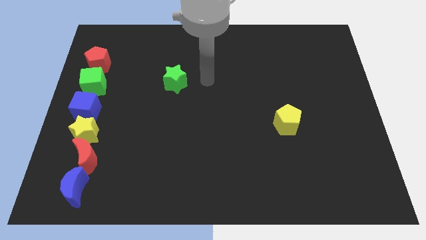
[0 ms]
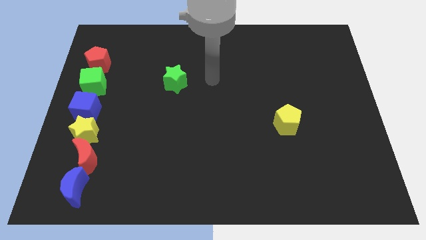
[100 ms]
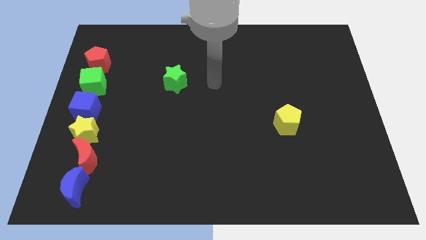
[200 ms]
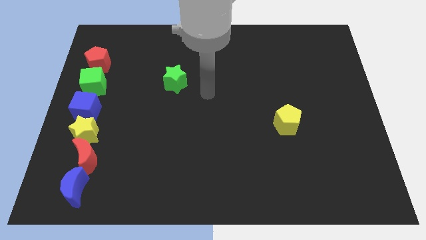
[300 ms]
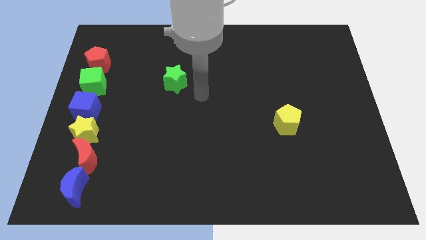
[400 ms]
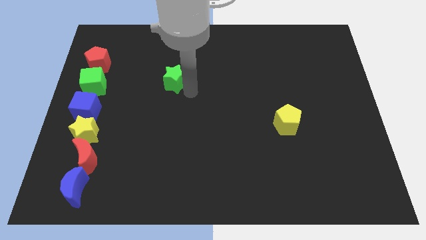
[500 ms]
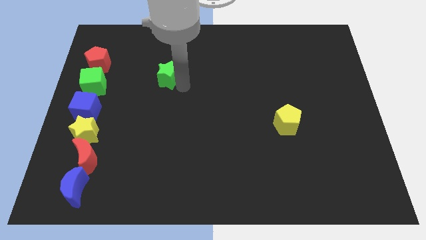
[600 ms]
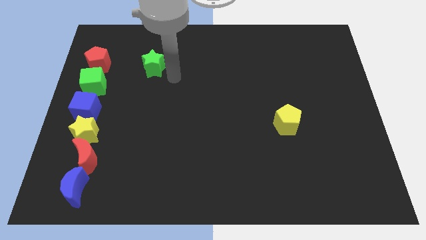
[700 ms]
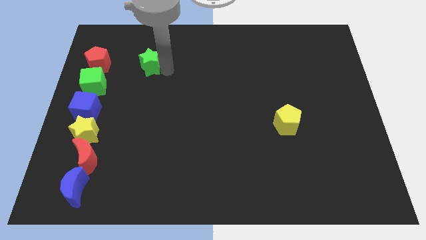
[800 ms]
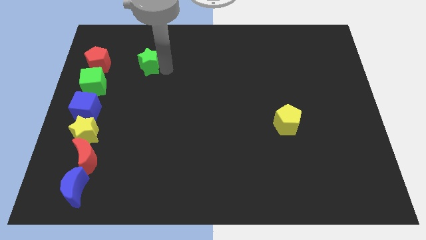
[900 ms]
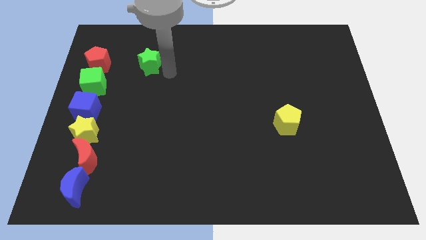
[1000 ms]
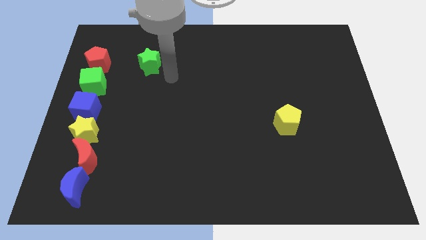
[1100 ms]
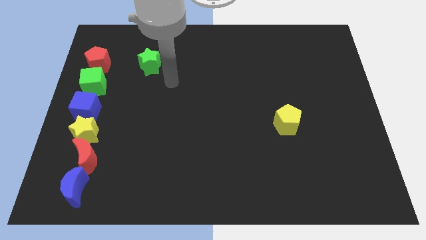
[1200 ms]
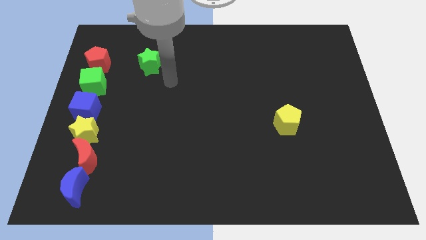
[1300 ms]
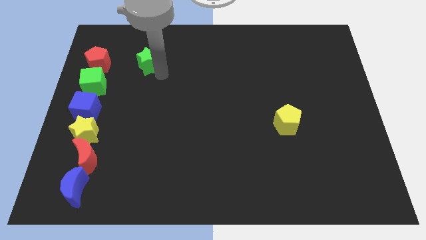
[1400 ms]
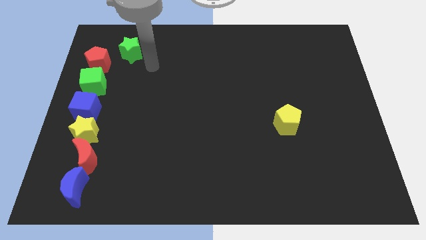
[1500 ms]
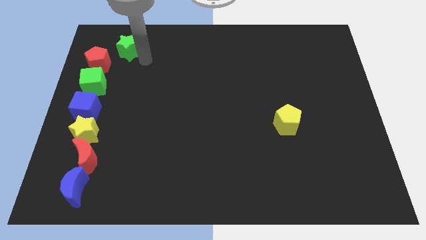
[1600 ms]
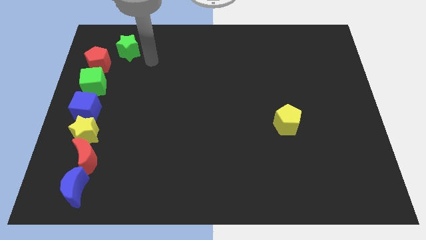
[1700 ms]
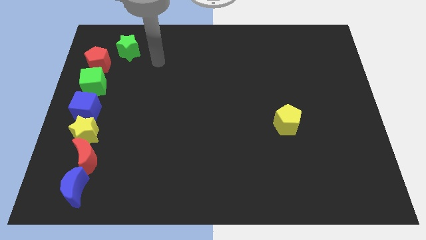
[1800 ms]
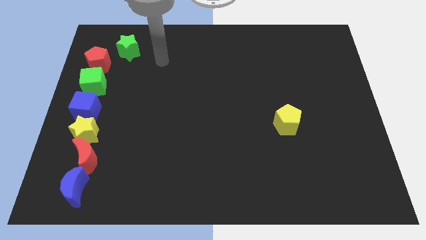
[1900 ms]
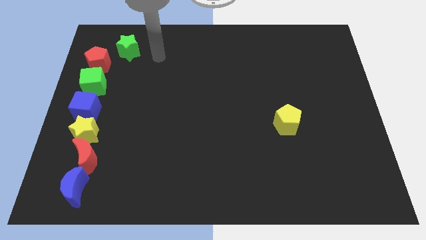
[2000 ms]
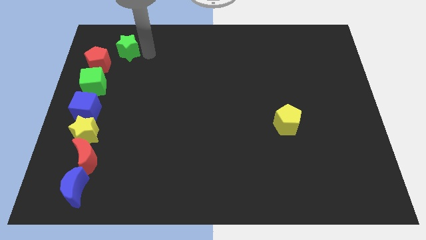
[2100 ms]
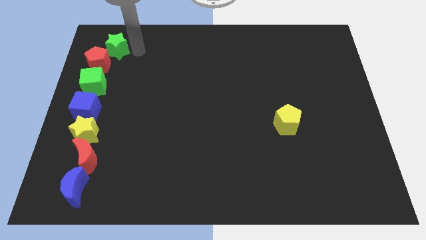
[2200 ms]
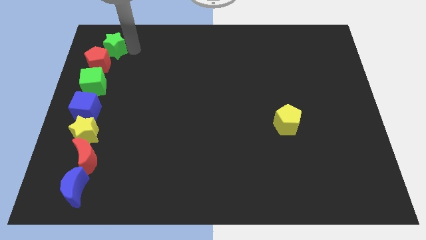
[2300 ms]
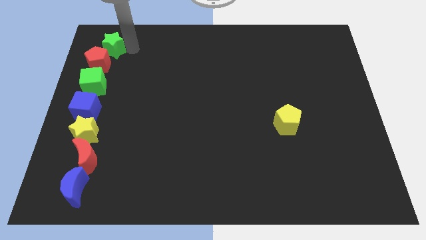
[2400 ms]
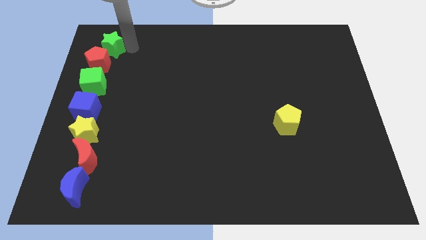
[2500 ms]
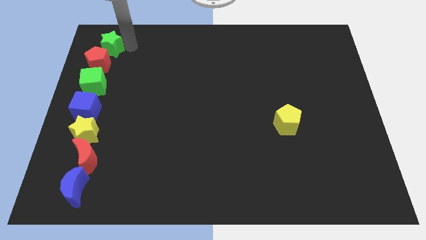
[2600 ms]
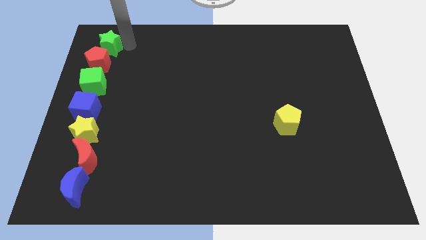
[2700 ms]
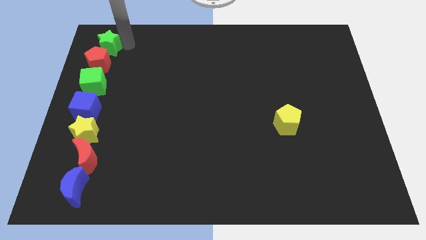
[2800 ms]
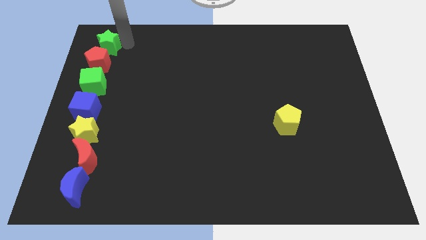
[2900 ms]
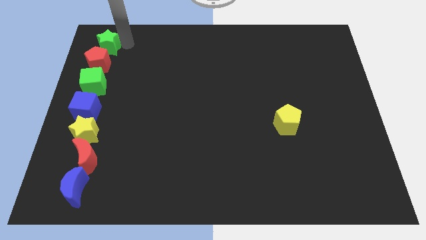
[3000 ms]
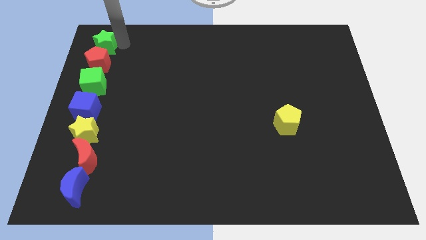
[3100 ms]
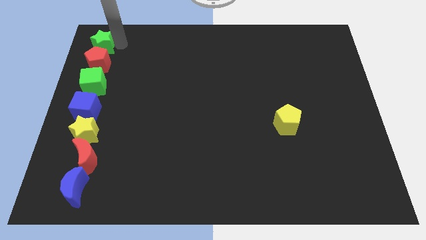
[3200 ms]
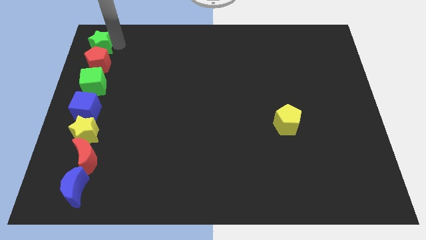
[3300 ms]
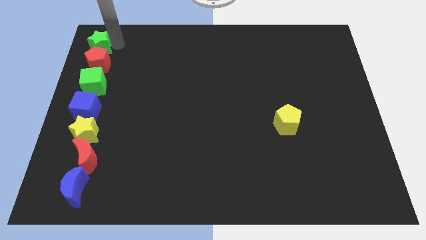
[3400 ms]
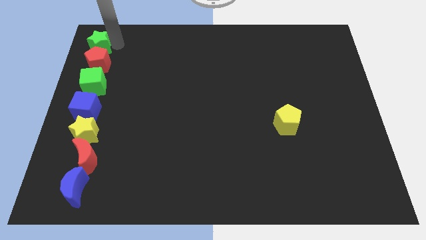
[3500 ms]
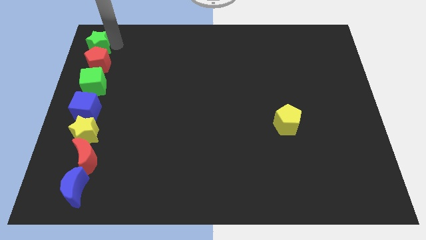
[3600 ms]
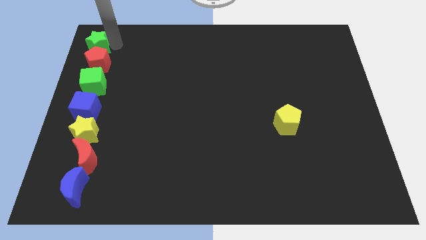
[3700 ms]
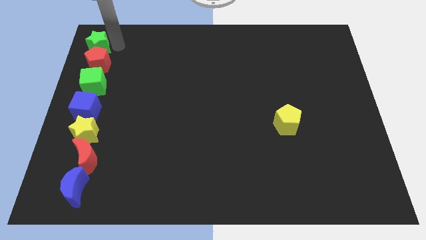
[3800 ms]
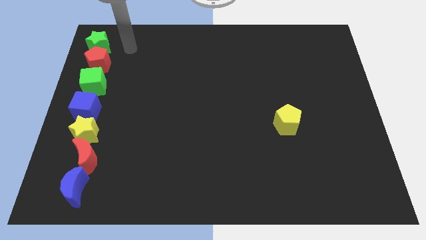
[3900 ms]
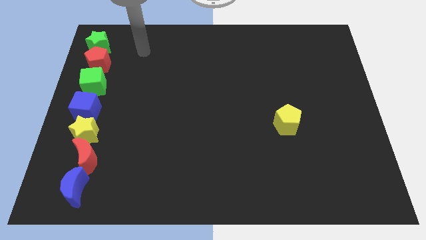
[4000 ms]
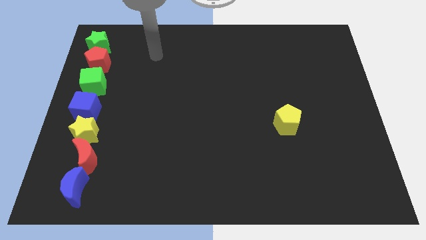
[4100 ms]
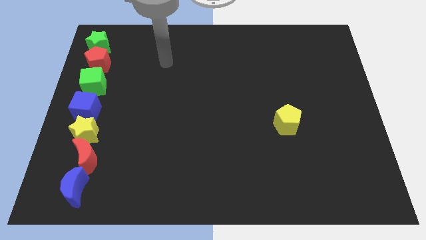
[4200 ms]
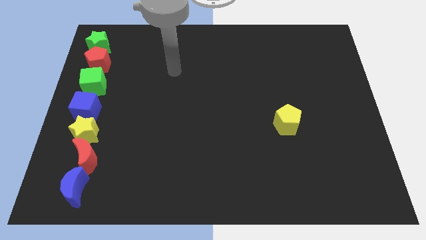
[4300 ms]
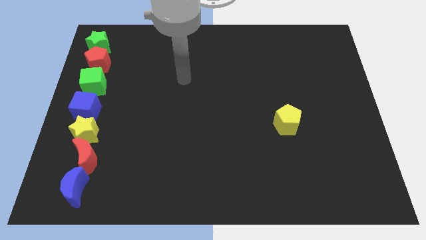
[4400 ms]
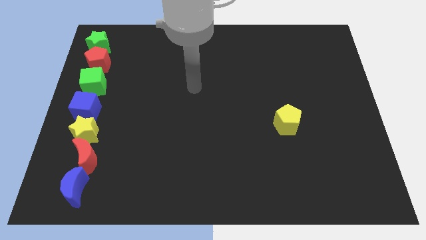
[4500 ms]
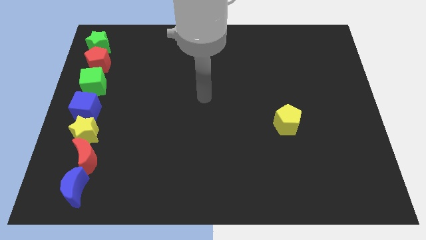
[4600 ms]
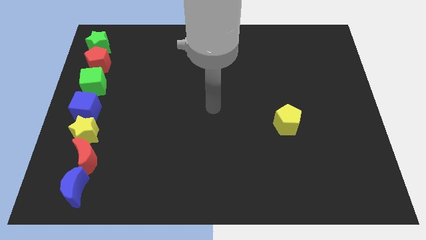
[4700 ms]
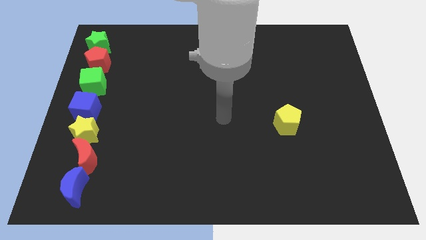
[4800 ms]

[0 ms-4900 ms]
move the green star to the top left of the board

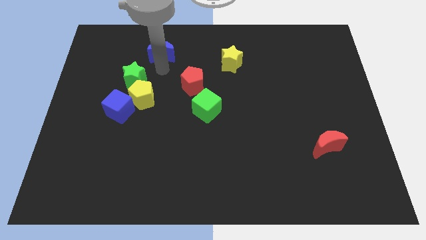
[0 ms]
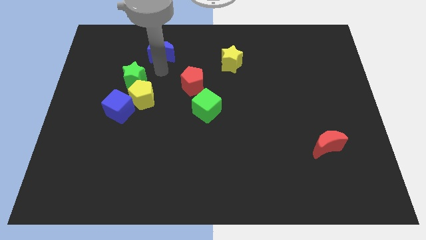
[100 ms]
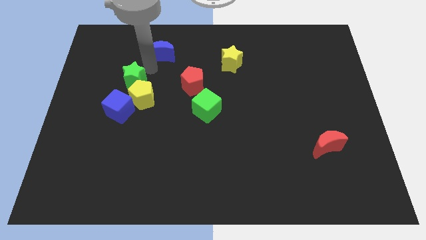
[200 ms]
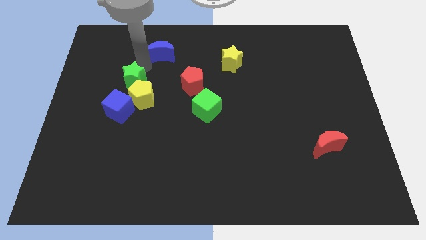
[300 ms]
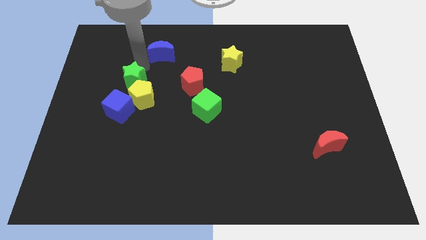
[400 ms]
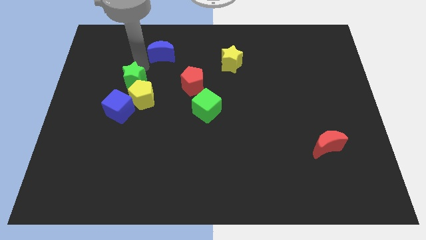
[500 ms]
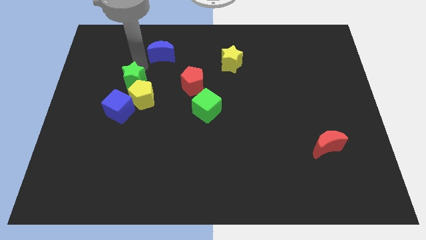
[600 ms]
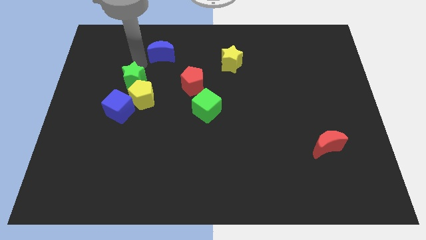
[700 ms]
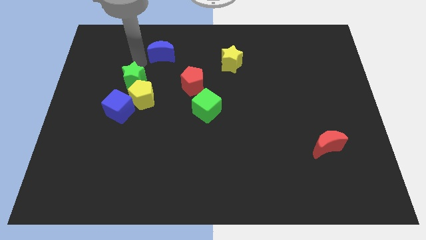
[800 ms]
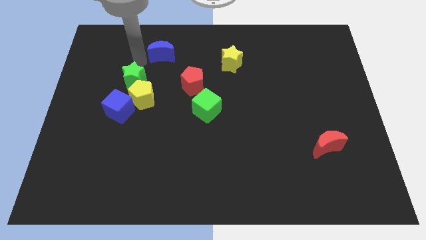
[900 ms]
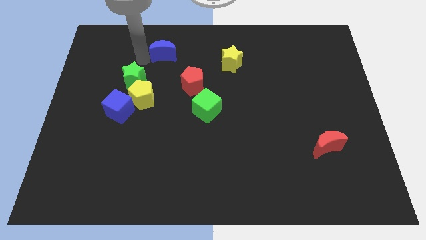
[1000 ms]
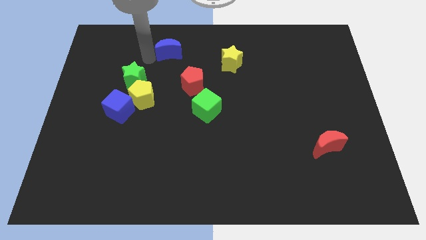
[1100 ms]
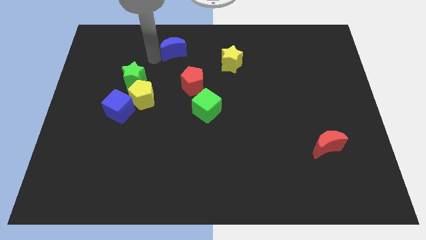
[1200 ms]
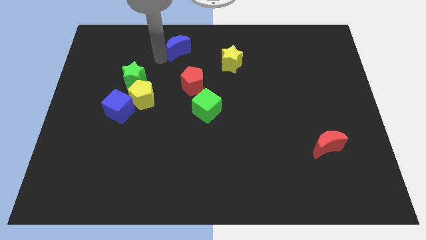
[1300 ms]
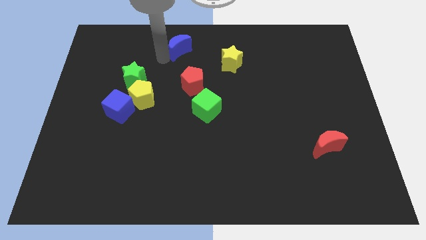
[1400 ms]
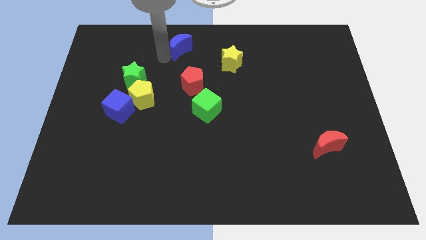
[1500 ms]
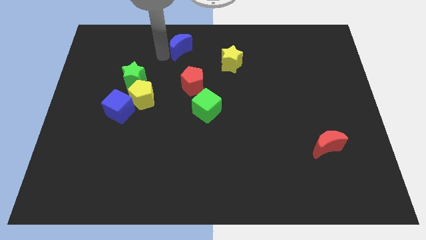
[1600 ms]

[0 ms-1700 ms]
place the blue moon above the red pentagon

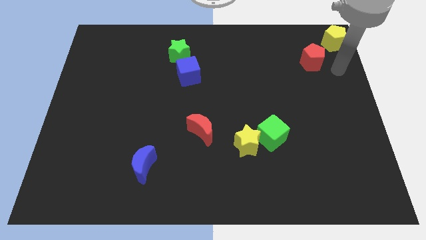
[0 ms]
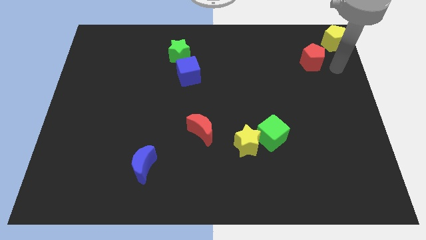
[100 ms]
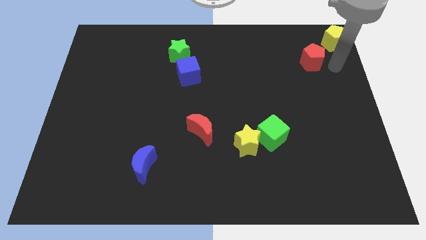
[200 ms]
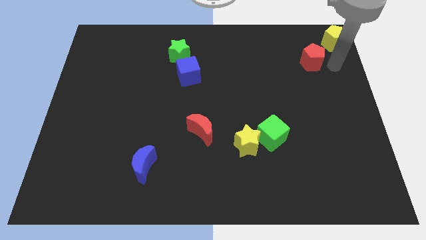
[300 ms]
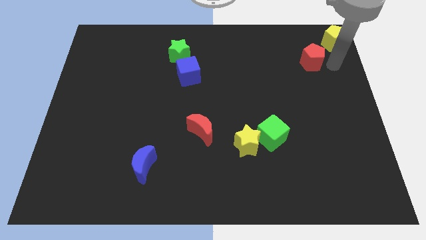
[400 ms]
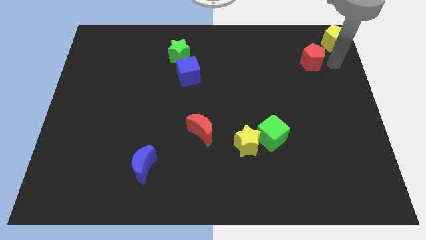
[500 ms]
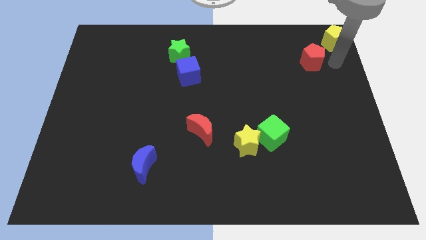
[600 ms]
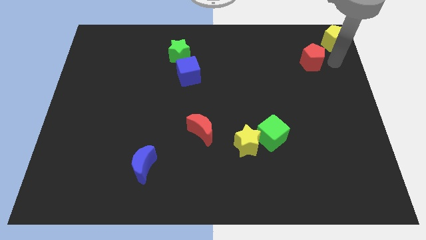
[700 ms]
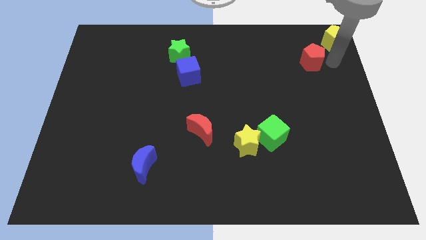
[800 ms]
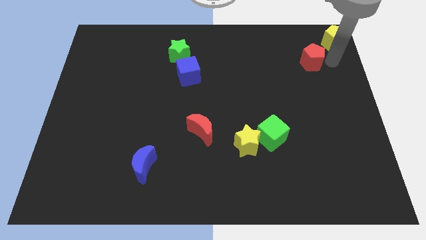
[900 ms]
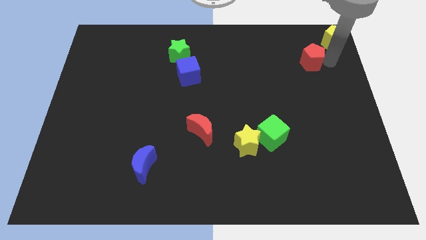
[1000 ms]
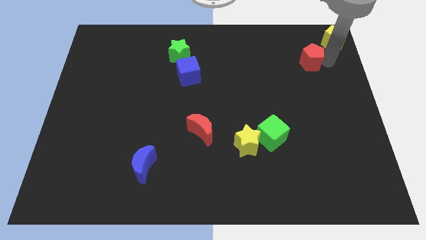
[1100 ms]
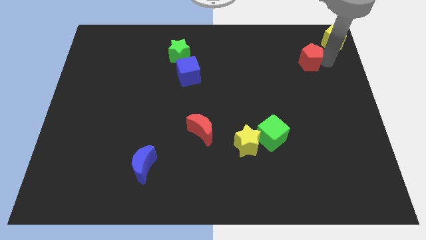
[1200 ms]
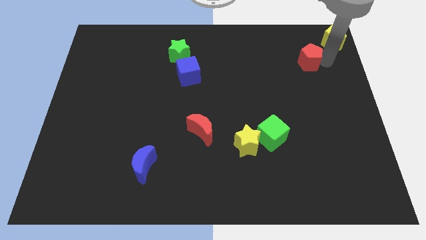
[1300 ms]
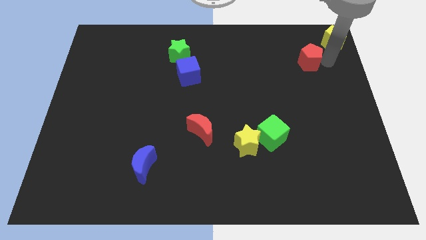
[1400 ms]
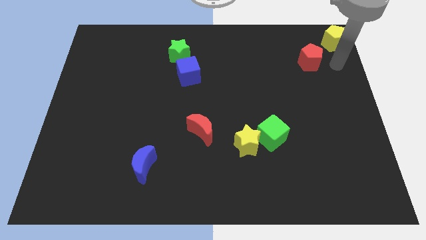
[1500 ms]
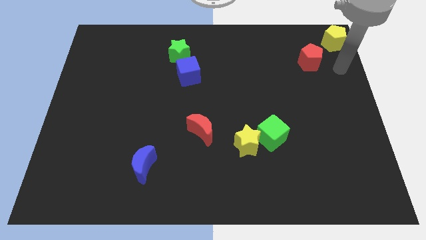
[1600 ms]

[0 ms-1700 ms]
slightly touch the red pentagon and move your arm

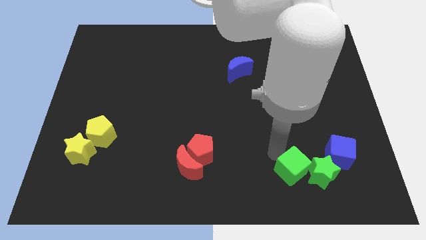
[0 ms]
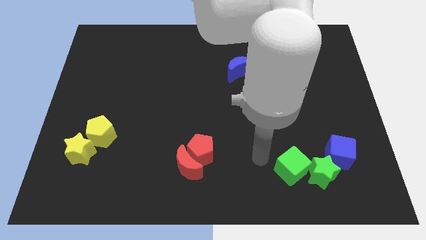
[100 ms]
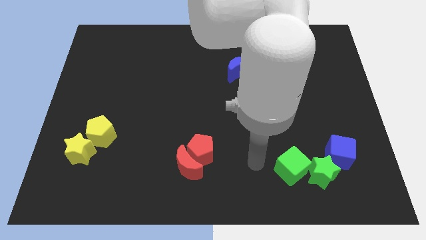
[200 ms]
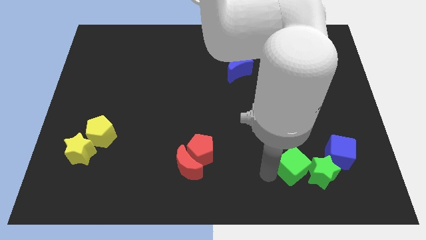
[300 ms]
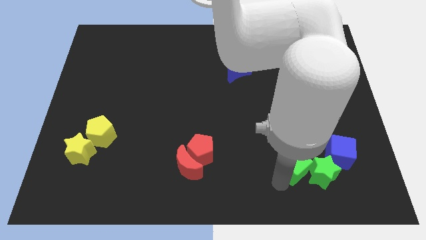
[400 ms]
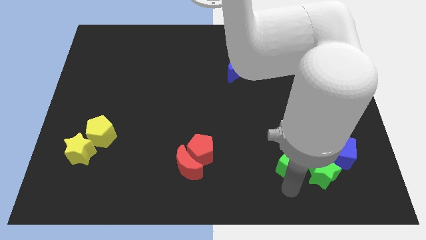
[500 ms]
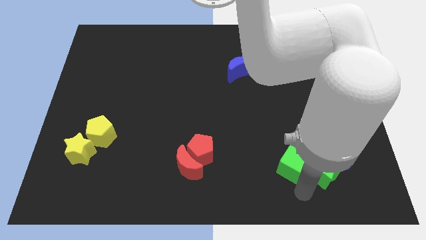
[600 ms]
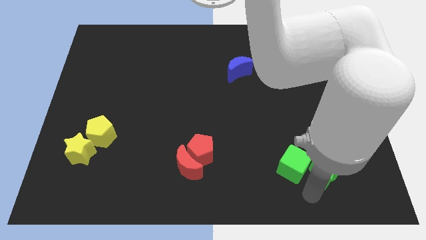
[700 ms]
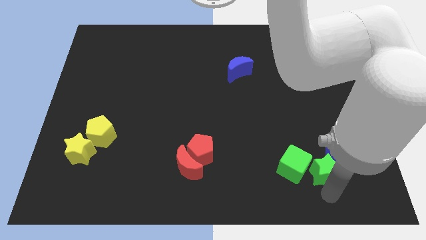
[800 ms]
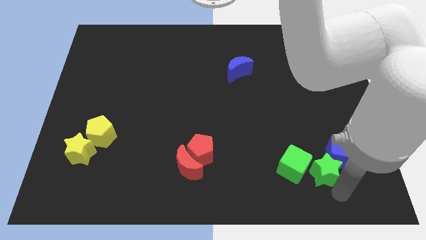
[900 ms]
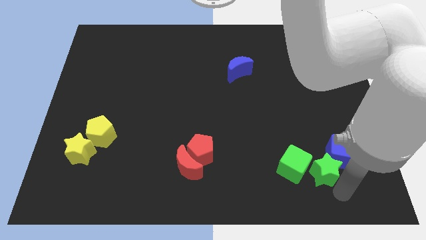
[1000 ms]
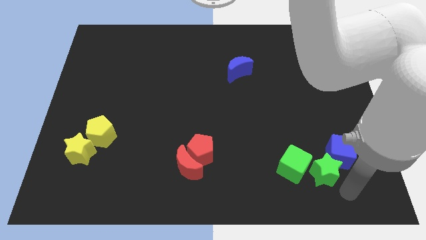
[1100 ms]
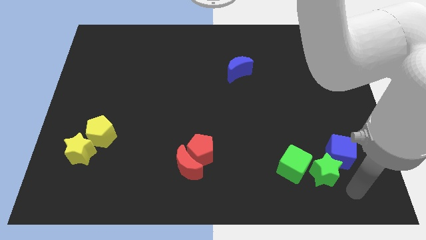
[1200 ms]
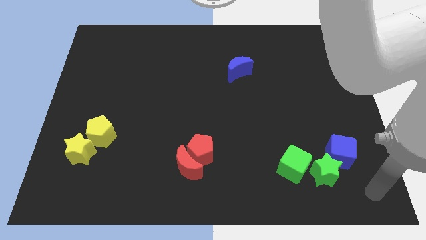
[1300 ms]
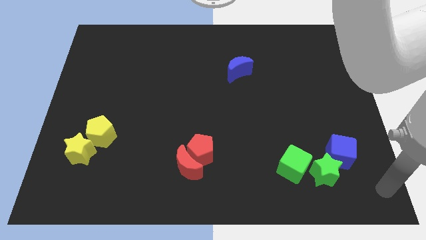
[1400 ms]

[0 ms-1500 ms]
tap the green blocks
